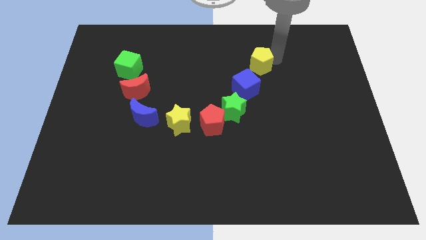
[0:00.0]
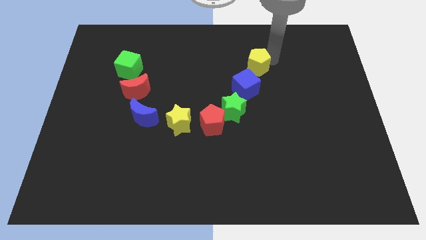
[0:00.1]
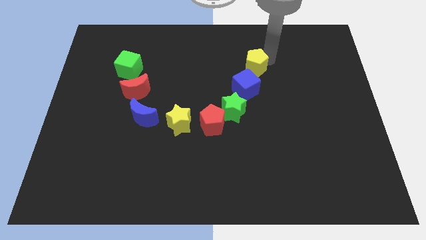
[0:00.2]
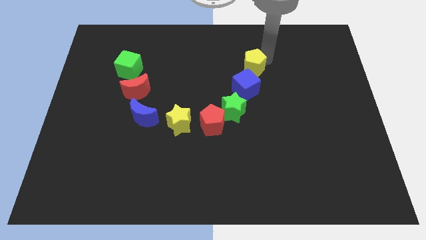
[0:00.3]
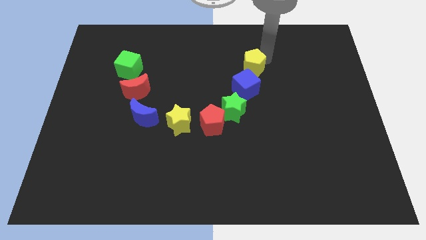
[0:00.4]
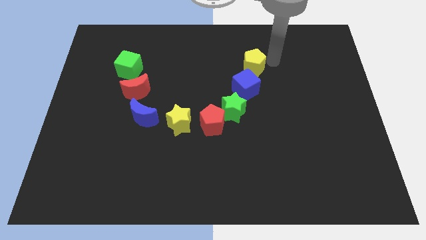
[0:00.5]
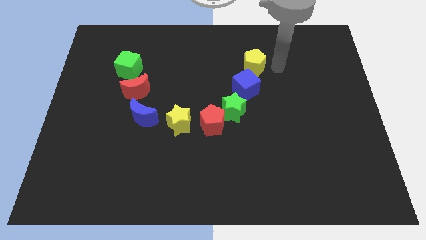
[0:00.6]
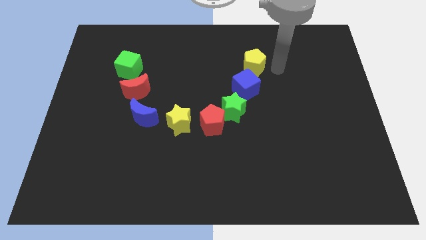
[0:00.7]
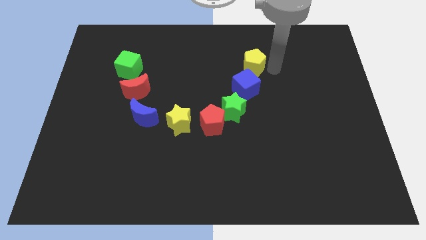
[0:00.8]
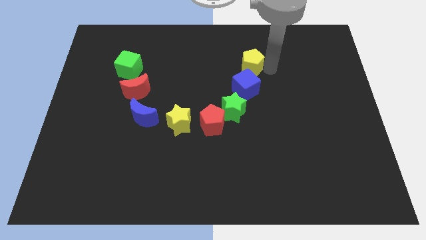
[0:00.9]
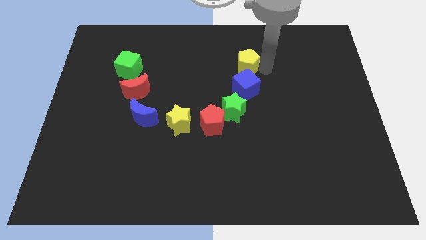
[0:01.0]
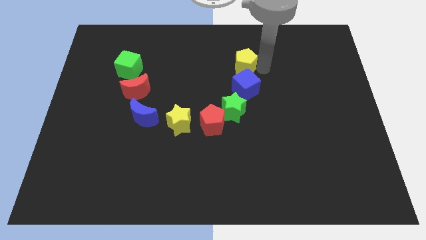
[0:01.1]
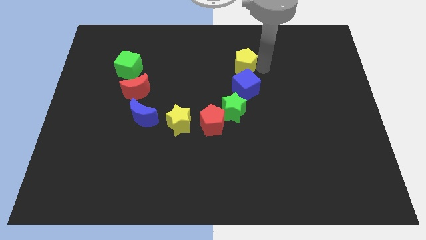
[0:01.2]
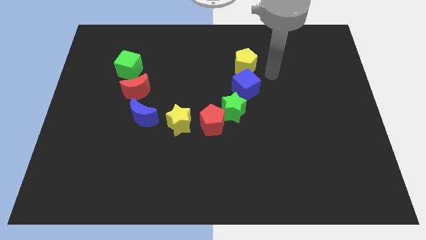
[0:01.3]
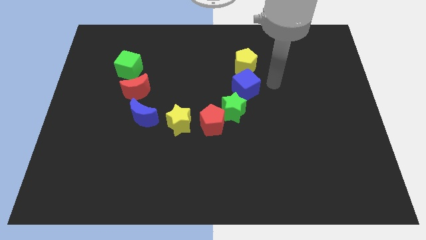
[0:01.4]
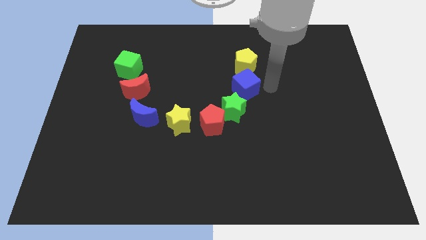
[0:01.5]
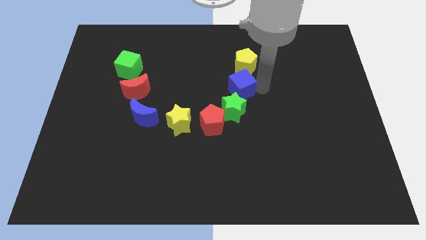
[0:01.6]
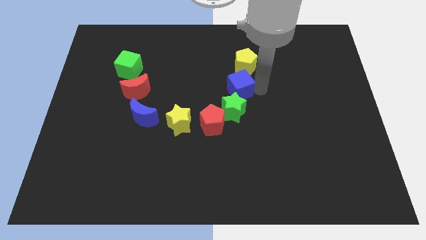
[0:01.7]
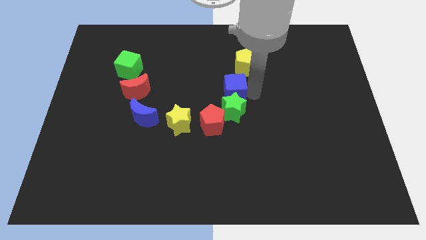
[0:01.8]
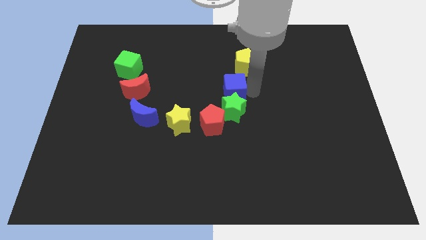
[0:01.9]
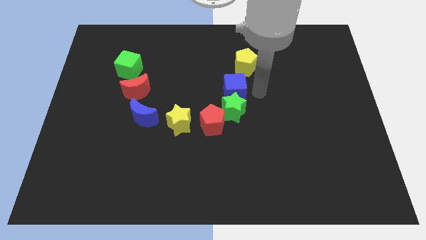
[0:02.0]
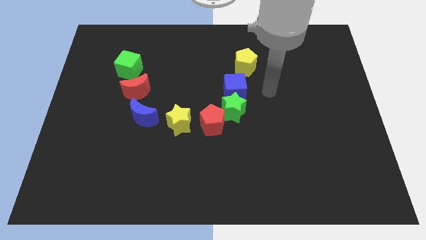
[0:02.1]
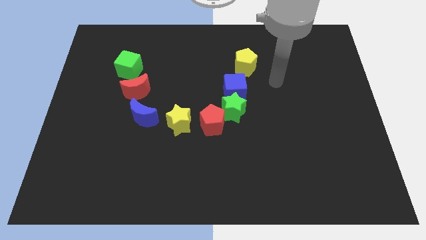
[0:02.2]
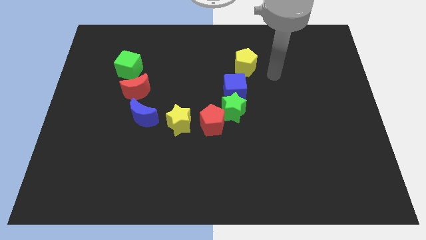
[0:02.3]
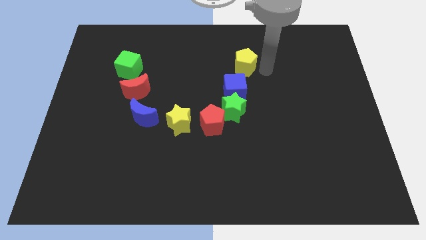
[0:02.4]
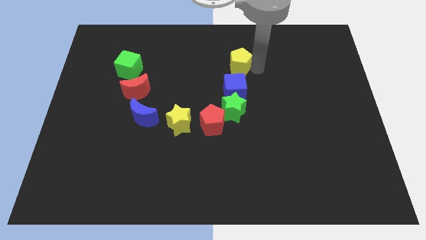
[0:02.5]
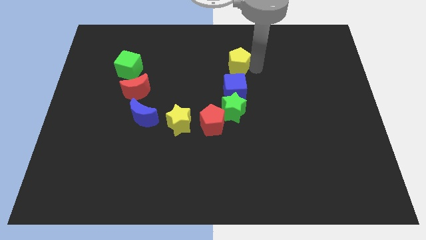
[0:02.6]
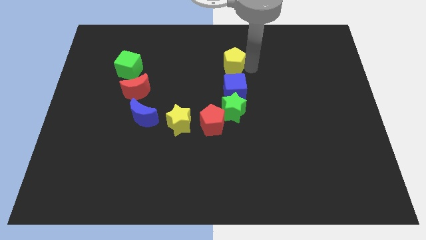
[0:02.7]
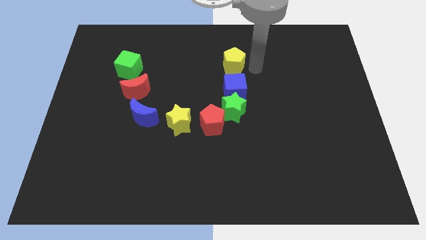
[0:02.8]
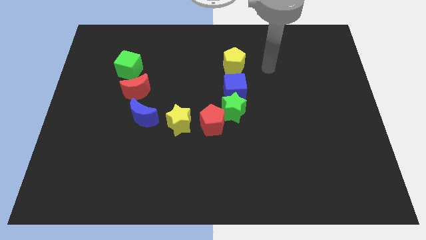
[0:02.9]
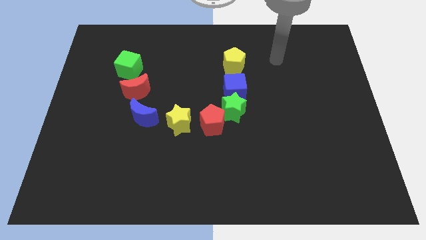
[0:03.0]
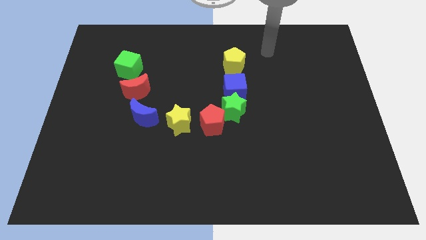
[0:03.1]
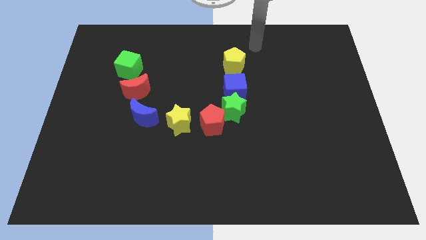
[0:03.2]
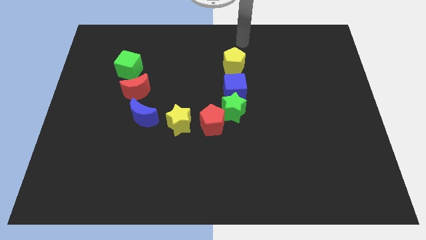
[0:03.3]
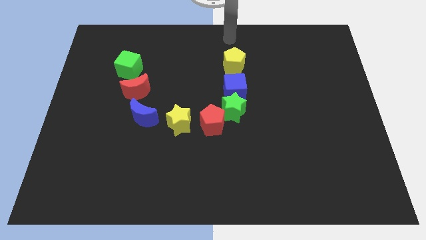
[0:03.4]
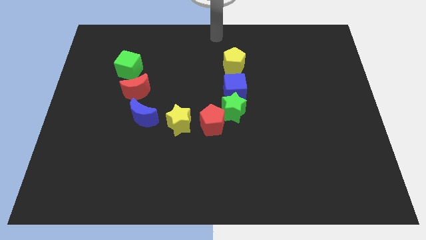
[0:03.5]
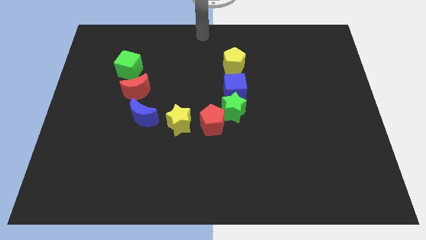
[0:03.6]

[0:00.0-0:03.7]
place the blue cube and yellow pentagon together to form a straight vertical line

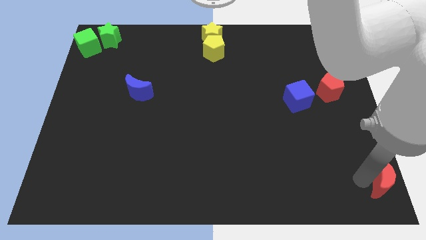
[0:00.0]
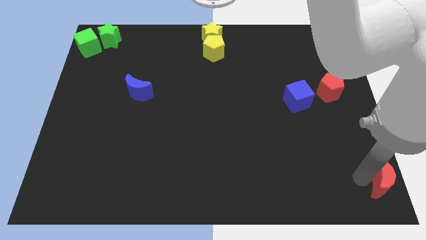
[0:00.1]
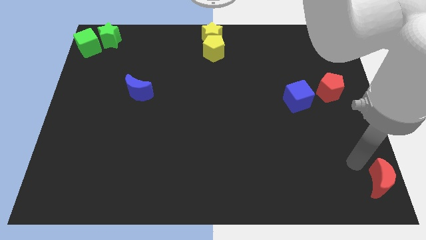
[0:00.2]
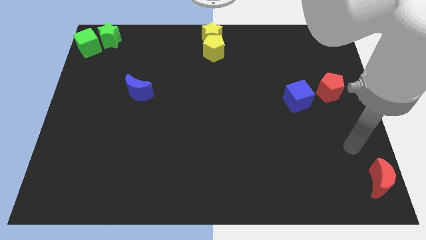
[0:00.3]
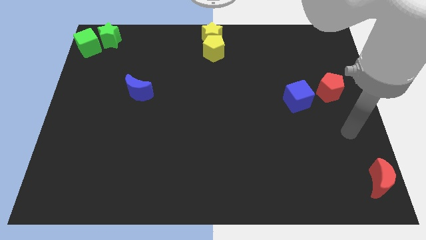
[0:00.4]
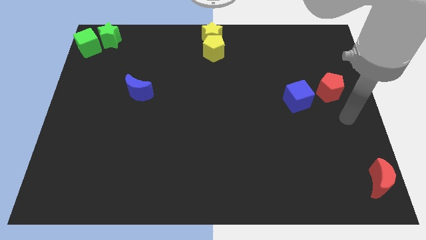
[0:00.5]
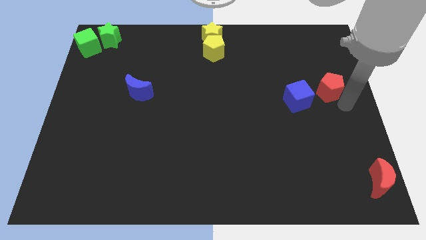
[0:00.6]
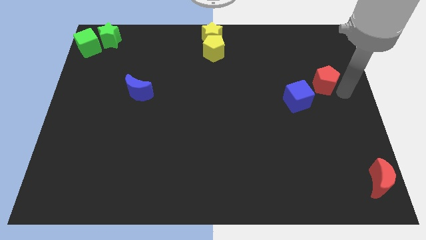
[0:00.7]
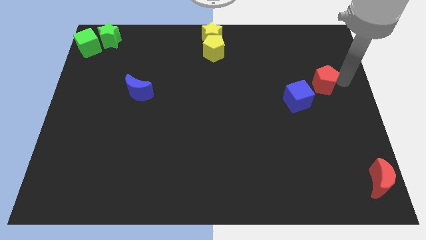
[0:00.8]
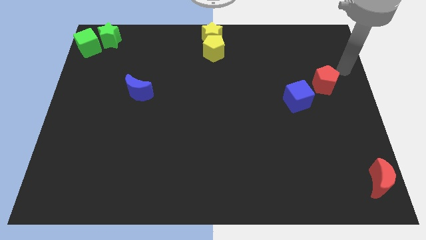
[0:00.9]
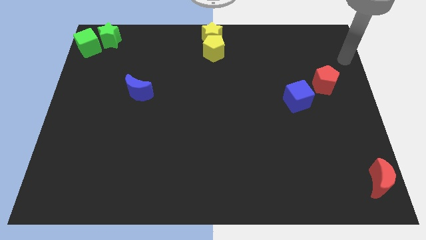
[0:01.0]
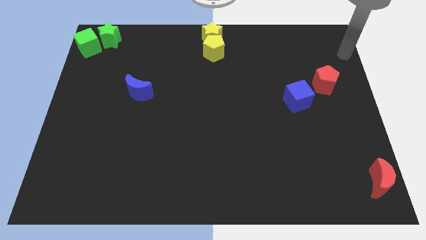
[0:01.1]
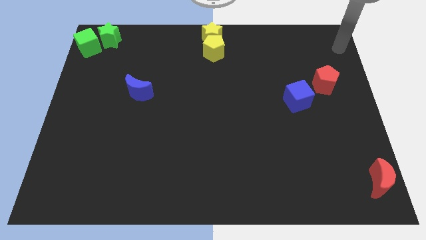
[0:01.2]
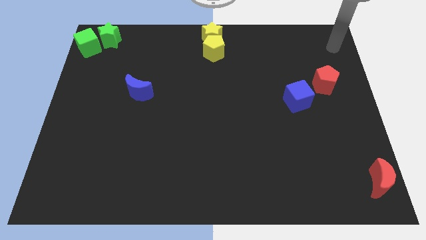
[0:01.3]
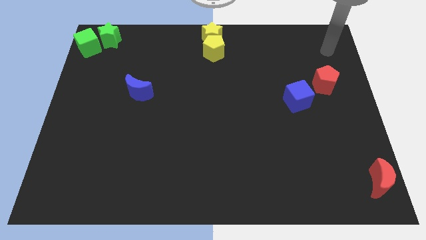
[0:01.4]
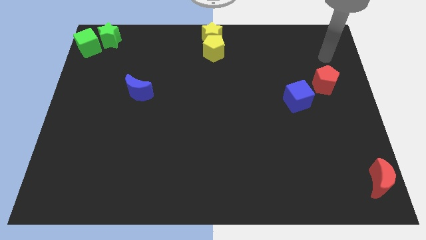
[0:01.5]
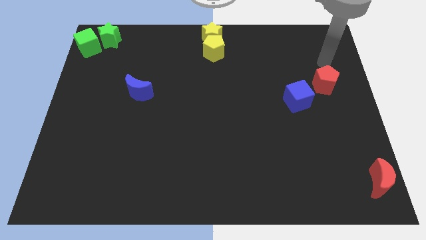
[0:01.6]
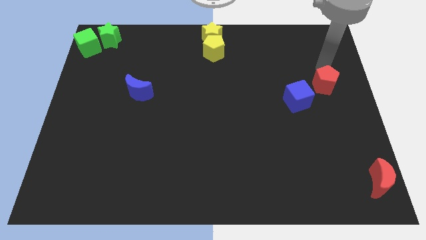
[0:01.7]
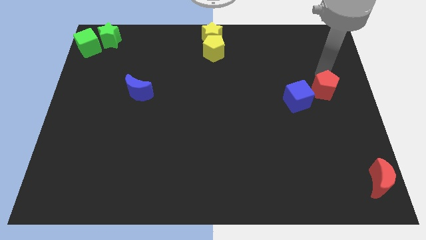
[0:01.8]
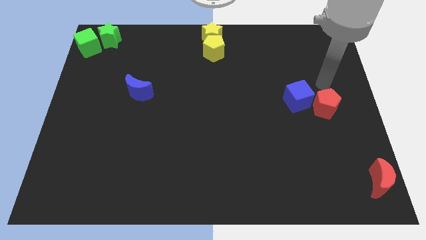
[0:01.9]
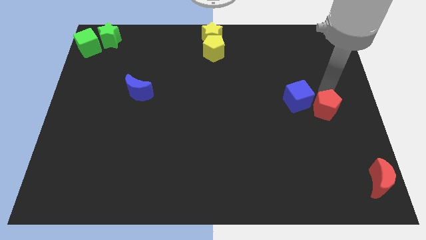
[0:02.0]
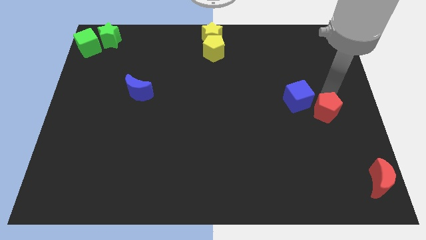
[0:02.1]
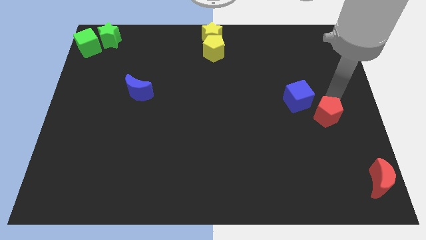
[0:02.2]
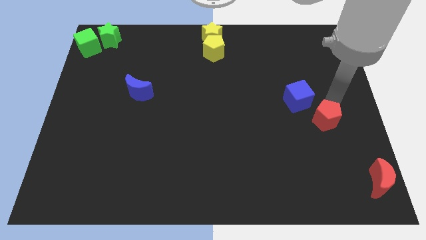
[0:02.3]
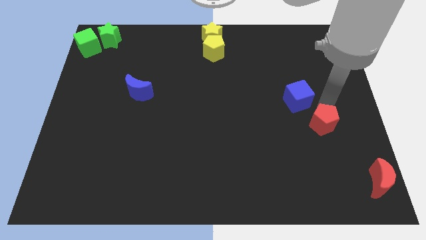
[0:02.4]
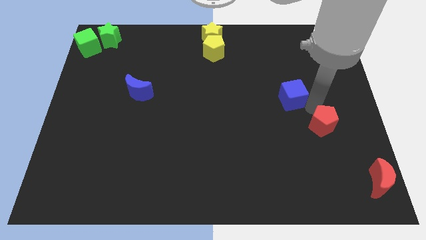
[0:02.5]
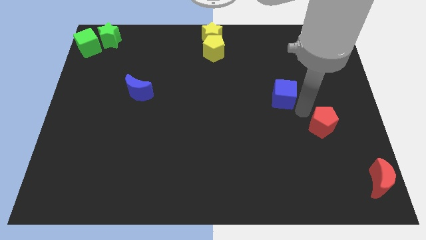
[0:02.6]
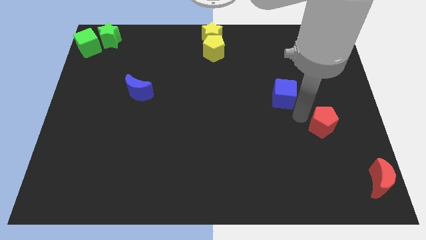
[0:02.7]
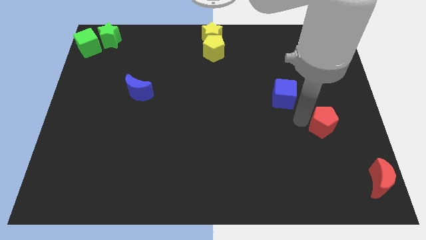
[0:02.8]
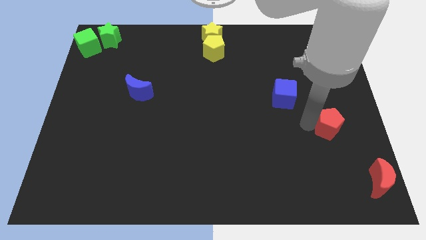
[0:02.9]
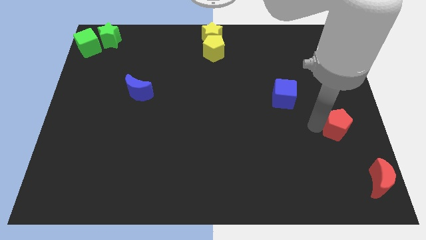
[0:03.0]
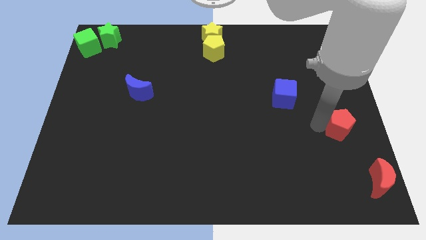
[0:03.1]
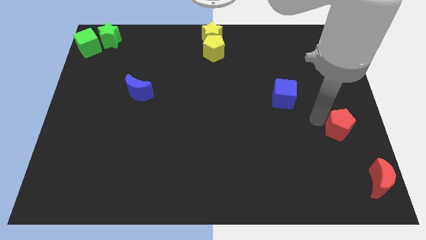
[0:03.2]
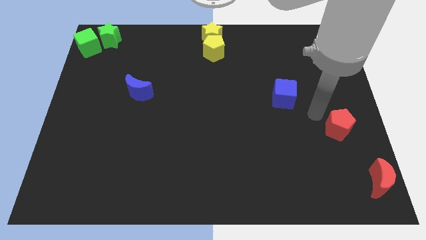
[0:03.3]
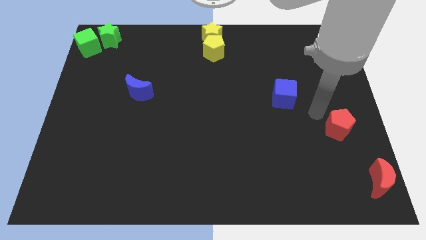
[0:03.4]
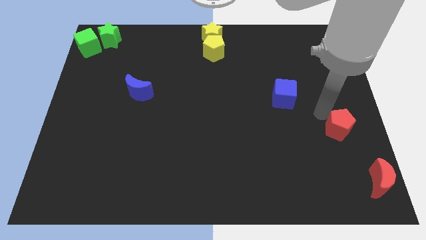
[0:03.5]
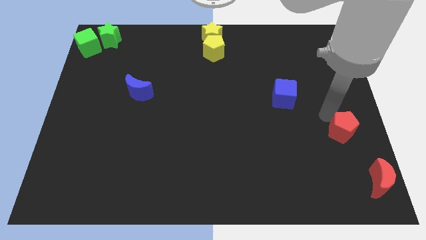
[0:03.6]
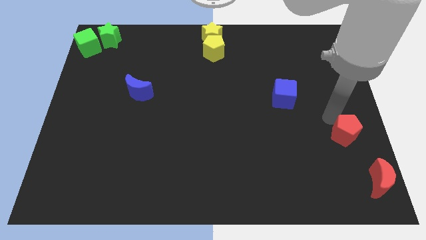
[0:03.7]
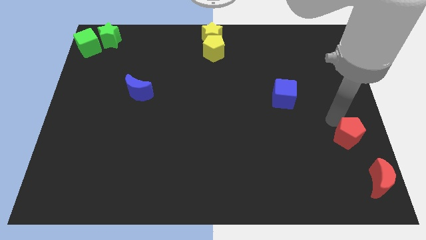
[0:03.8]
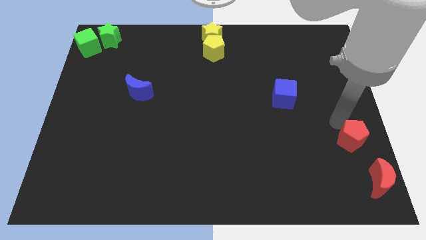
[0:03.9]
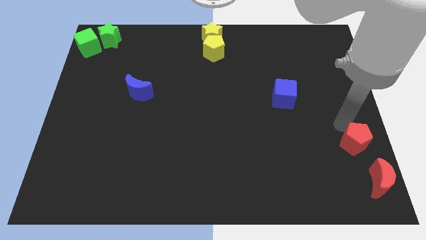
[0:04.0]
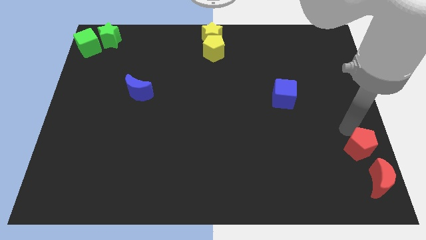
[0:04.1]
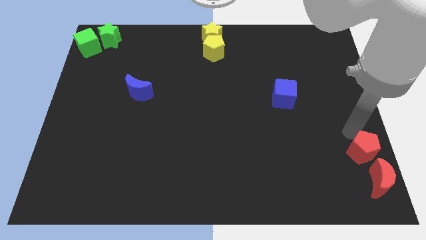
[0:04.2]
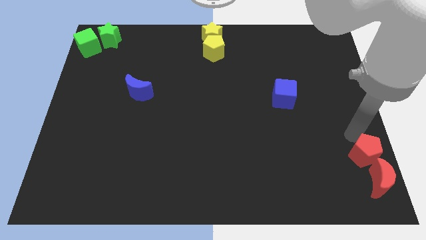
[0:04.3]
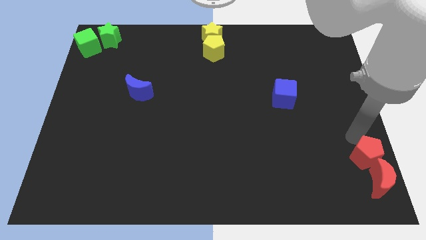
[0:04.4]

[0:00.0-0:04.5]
drag the red pentagon into the top side of the red moon

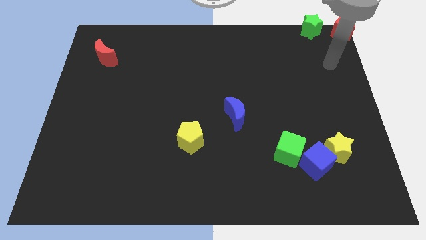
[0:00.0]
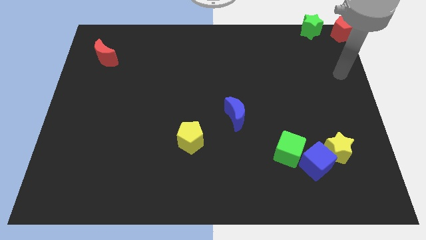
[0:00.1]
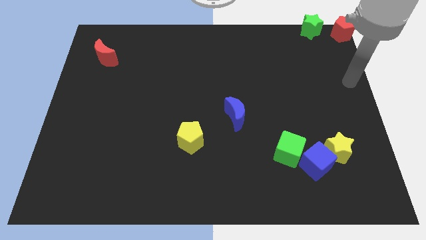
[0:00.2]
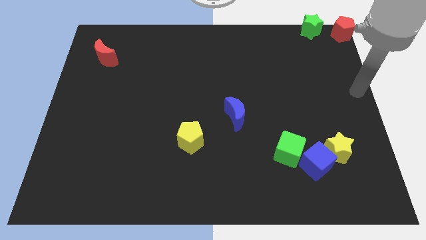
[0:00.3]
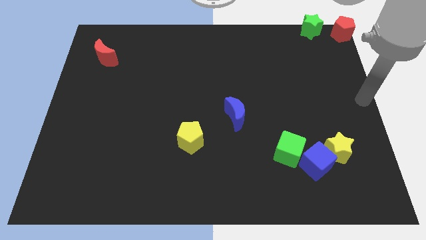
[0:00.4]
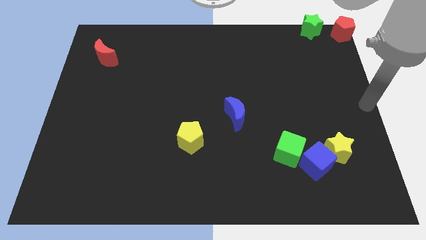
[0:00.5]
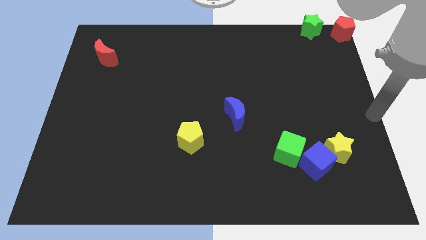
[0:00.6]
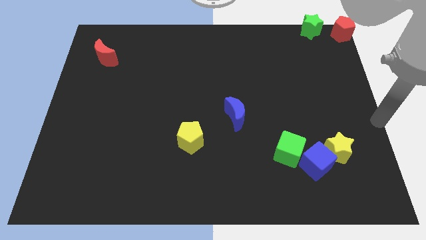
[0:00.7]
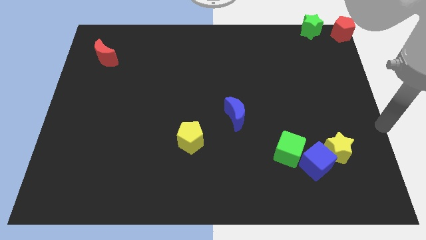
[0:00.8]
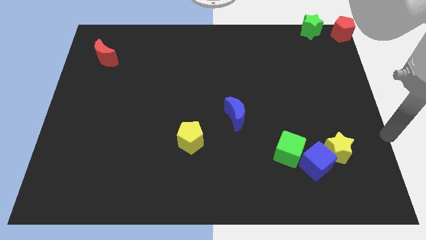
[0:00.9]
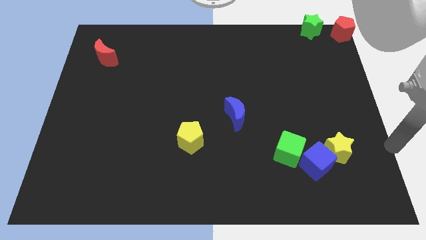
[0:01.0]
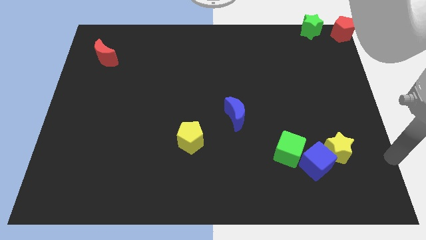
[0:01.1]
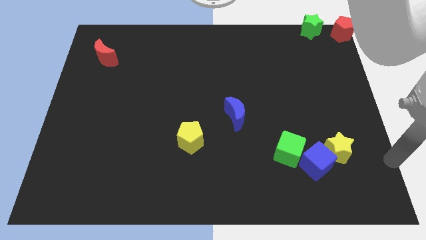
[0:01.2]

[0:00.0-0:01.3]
move your arm to the right of the yellow star
